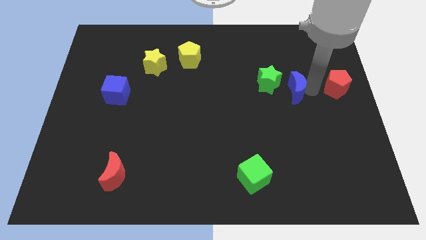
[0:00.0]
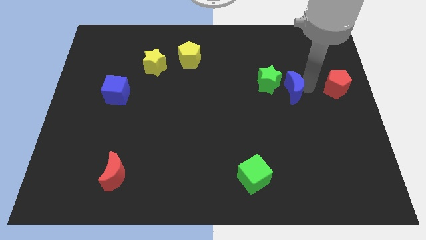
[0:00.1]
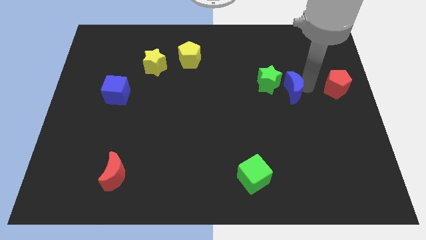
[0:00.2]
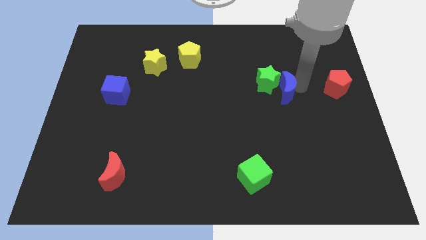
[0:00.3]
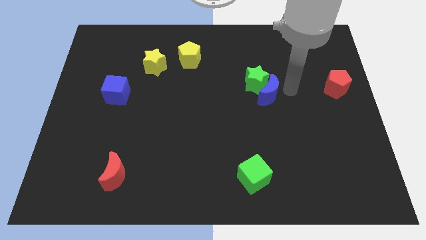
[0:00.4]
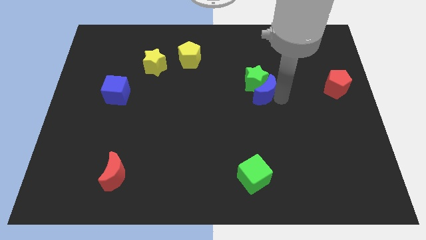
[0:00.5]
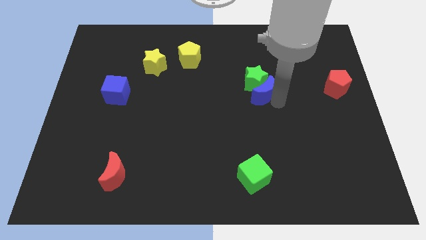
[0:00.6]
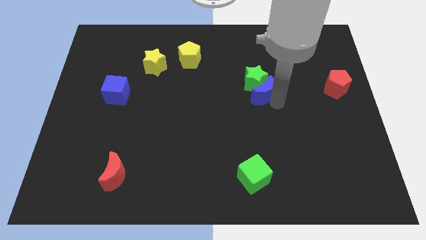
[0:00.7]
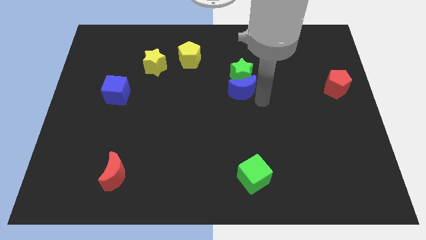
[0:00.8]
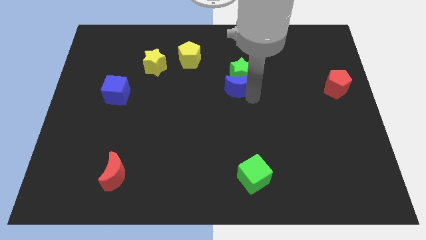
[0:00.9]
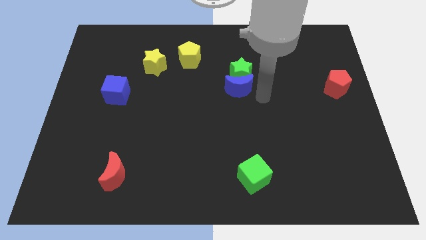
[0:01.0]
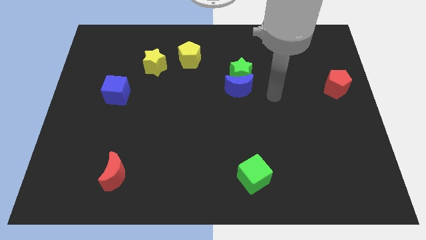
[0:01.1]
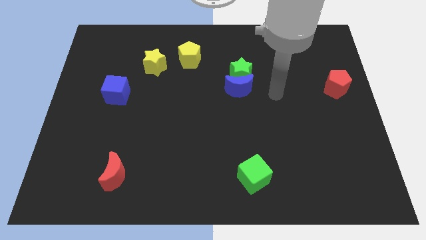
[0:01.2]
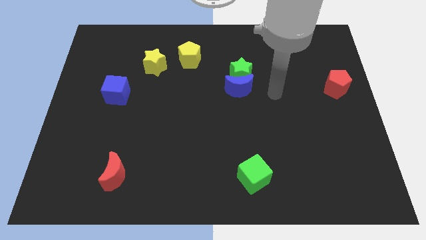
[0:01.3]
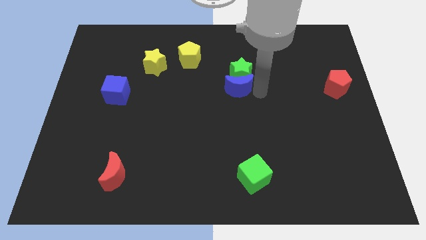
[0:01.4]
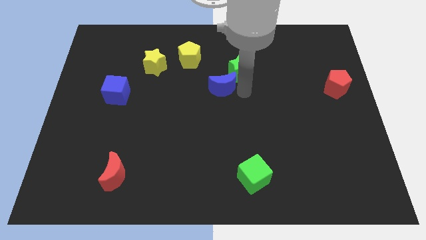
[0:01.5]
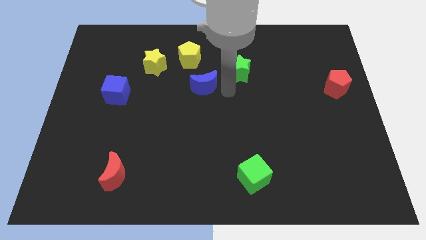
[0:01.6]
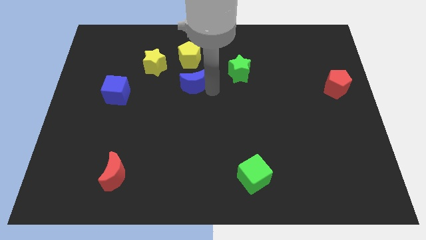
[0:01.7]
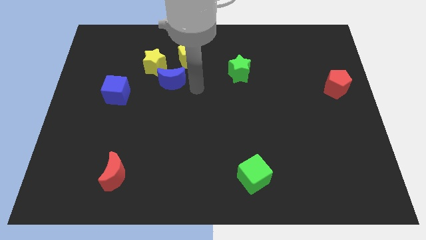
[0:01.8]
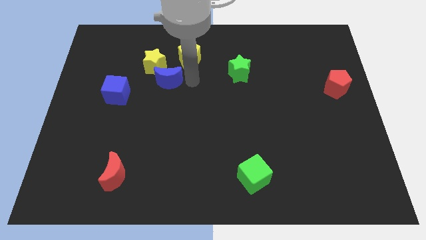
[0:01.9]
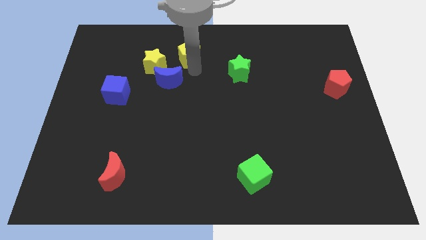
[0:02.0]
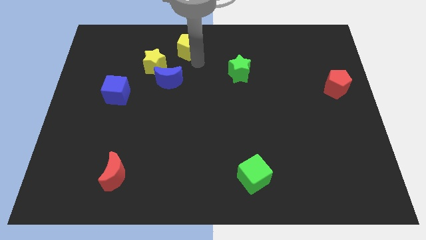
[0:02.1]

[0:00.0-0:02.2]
move the blue moon to the bottom of yellow star

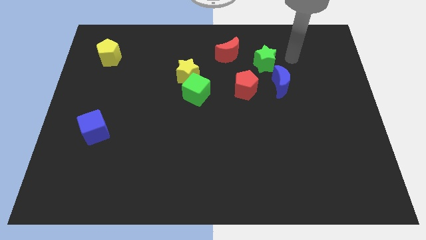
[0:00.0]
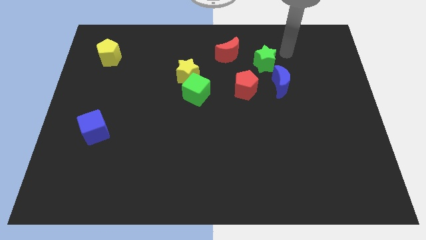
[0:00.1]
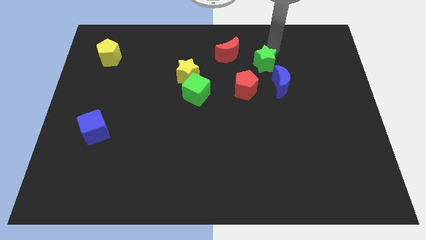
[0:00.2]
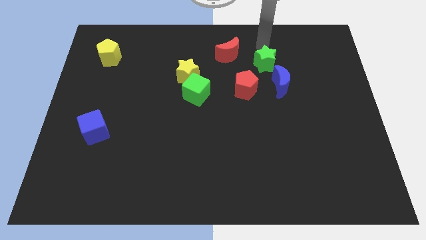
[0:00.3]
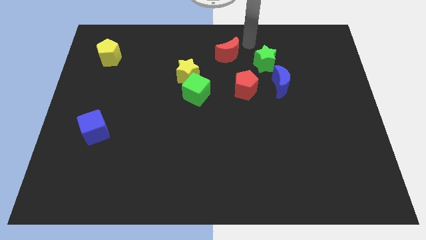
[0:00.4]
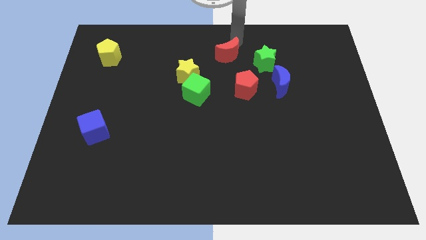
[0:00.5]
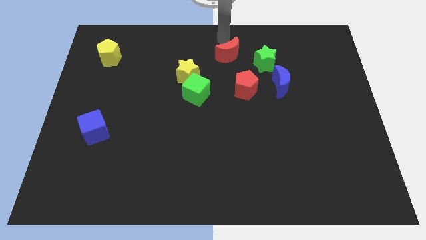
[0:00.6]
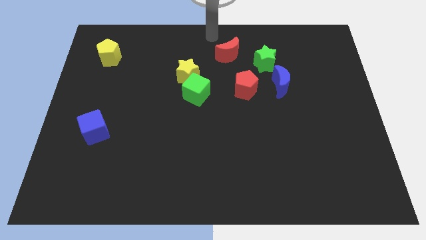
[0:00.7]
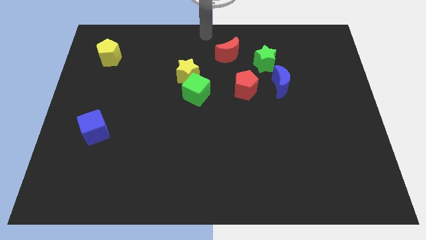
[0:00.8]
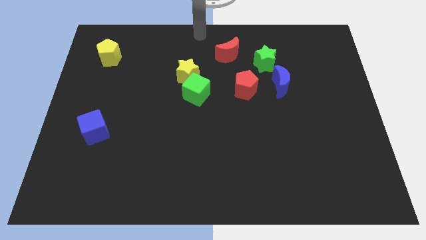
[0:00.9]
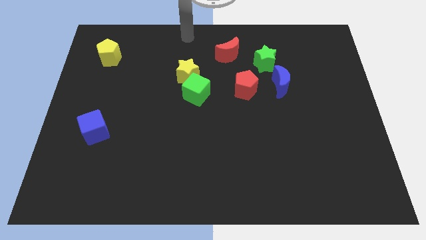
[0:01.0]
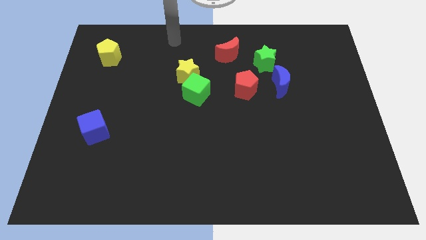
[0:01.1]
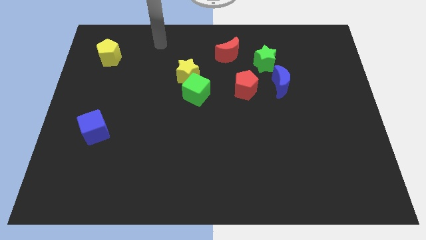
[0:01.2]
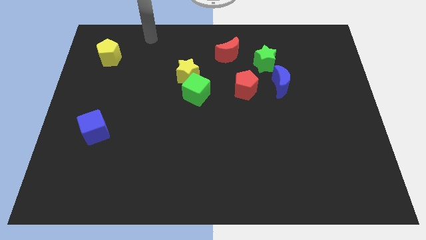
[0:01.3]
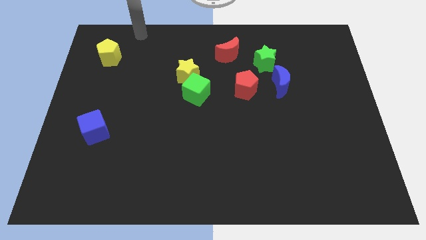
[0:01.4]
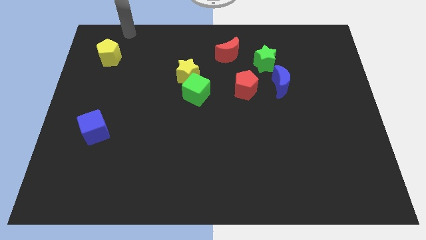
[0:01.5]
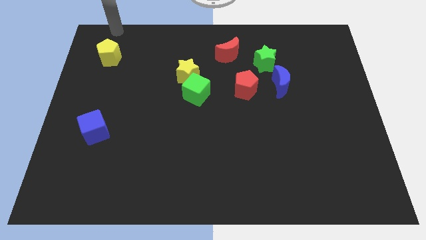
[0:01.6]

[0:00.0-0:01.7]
place your arm above the yellow pentagon

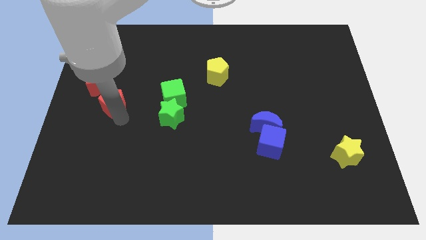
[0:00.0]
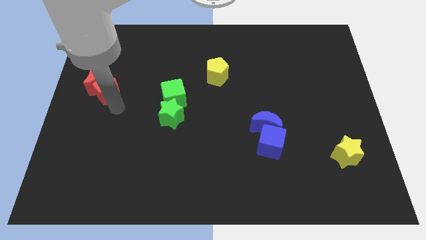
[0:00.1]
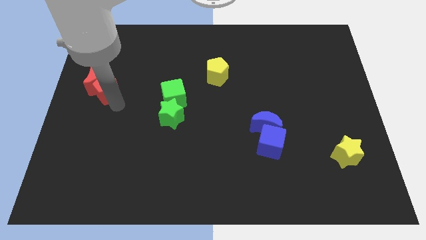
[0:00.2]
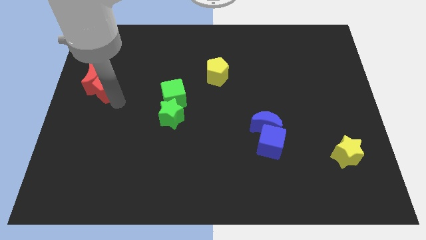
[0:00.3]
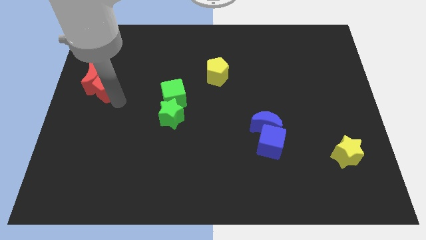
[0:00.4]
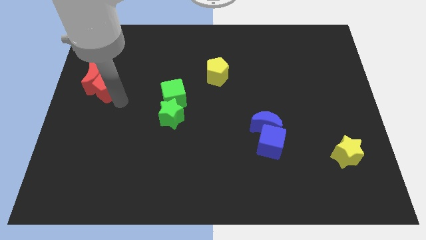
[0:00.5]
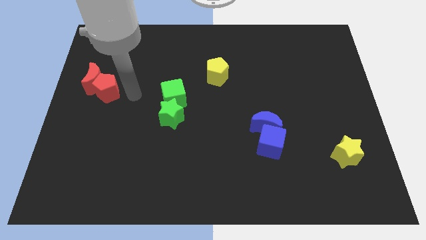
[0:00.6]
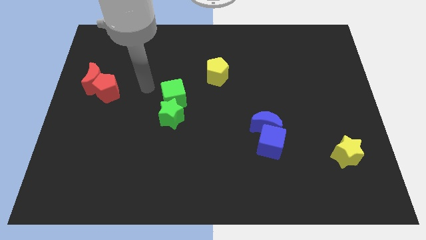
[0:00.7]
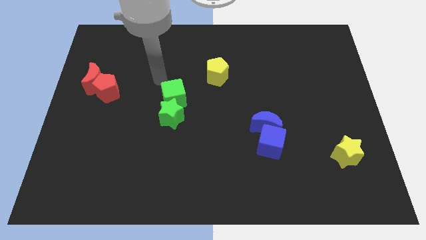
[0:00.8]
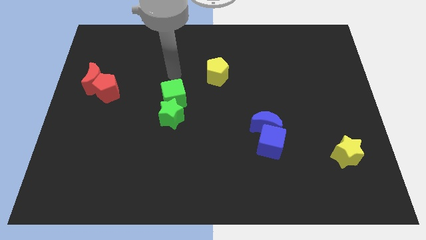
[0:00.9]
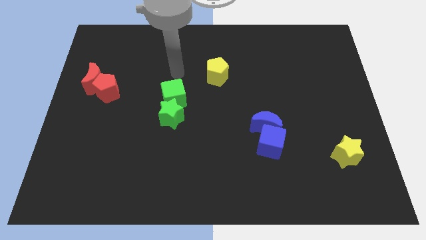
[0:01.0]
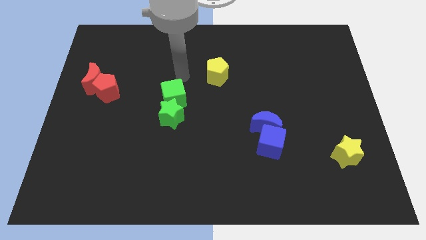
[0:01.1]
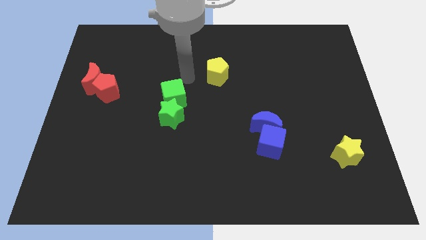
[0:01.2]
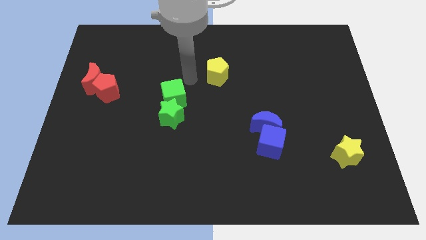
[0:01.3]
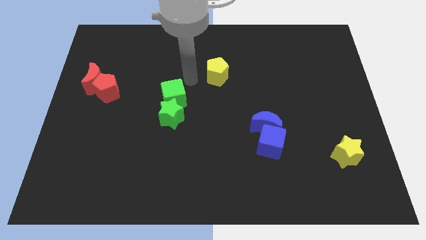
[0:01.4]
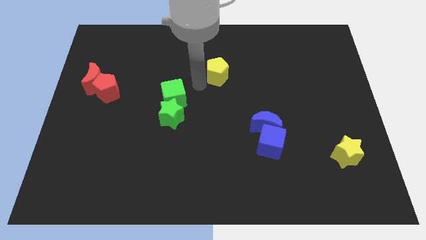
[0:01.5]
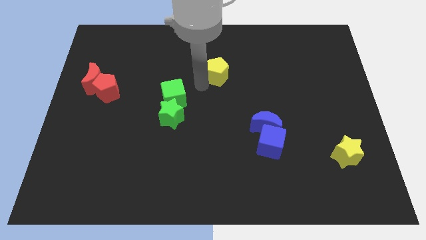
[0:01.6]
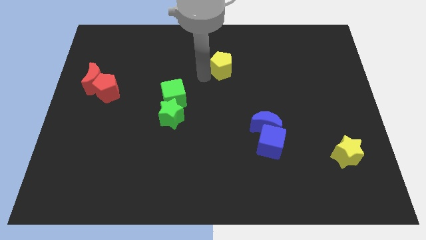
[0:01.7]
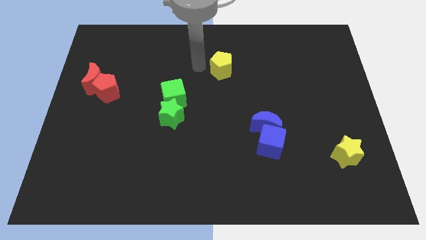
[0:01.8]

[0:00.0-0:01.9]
push the yellow pentagon towards right

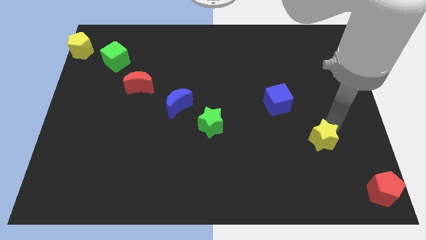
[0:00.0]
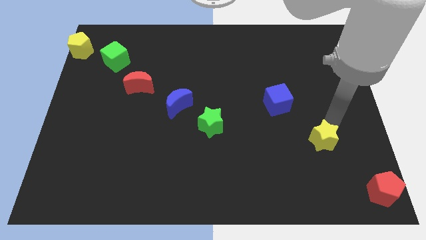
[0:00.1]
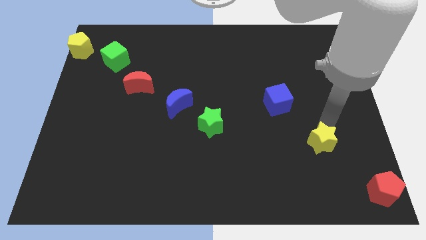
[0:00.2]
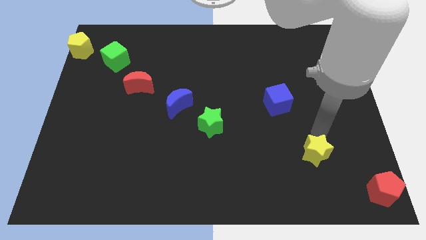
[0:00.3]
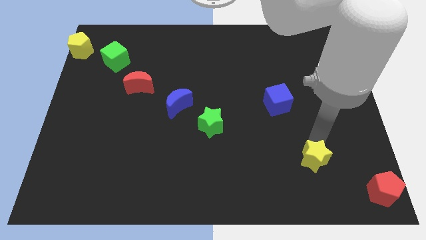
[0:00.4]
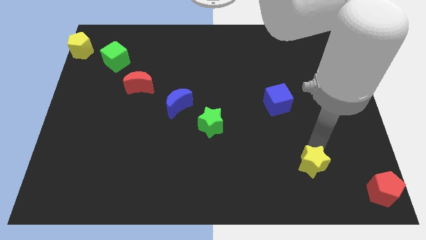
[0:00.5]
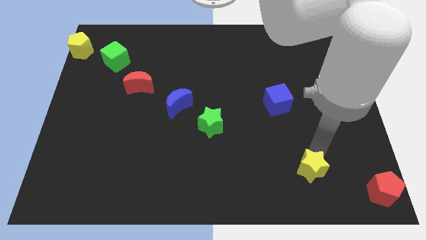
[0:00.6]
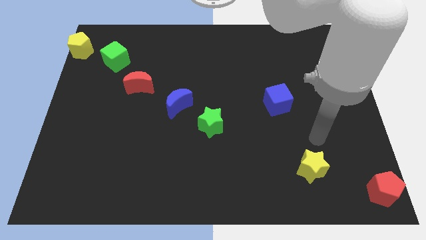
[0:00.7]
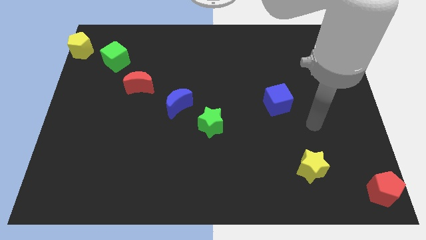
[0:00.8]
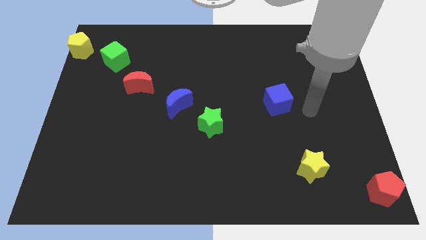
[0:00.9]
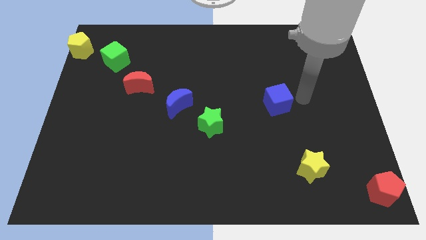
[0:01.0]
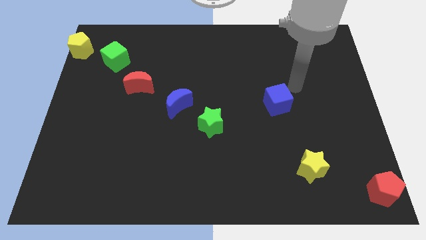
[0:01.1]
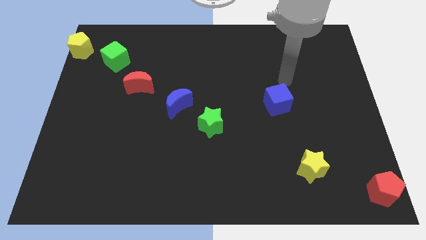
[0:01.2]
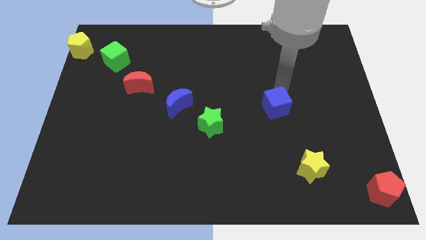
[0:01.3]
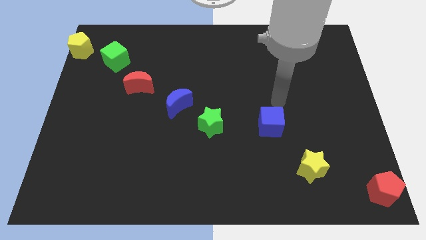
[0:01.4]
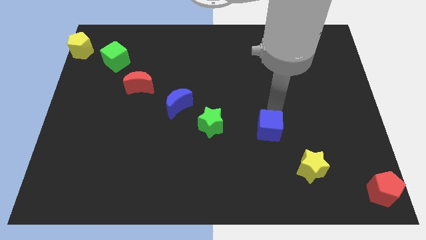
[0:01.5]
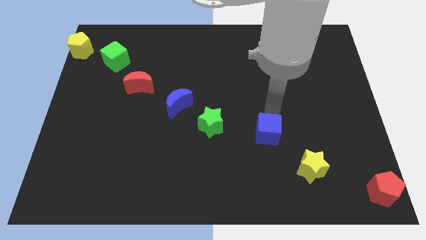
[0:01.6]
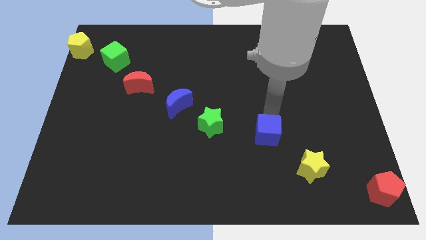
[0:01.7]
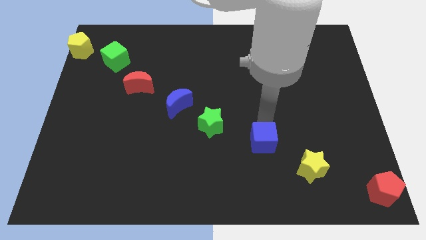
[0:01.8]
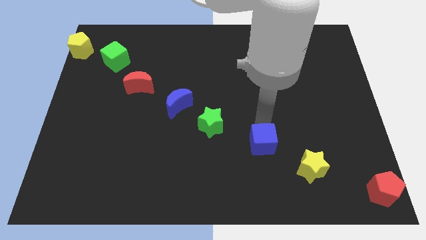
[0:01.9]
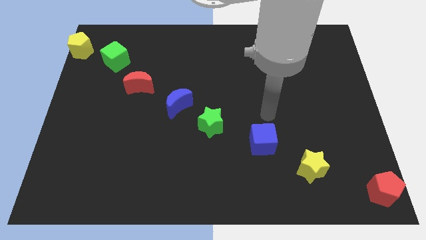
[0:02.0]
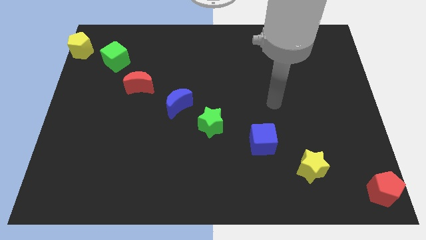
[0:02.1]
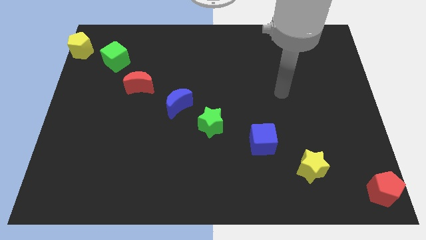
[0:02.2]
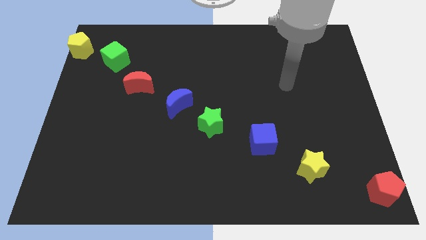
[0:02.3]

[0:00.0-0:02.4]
move the yellow star and blue cube towards bottom

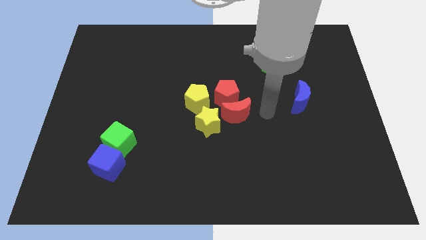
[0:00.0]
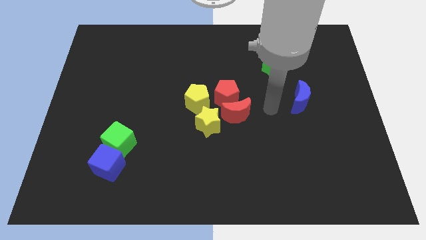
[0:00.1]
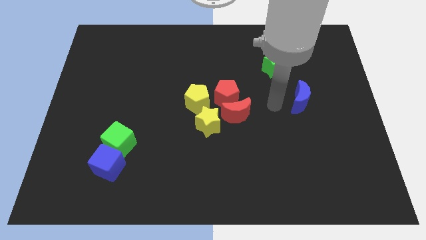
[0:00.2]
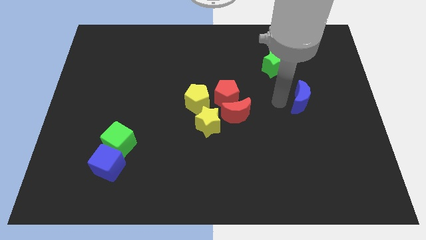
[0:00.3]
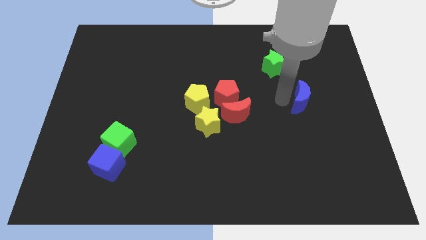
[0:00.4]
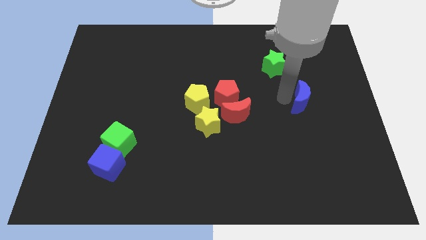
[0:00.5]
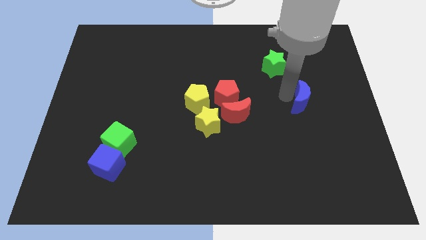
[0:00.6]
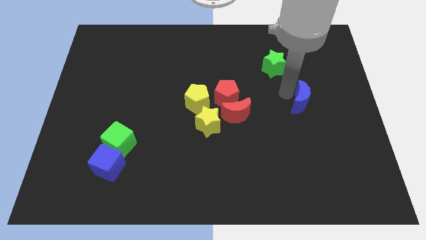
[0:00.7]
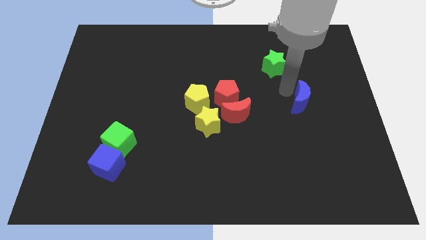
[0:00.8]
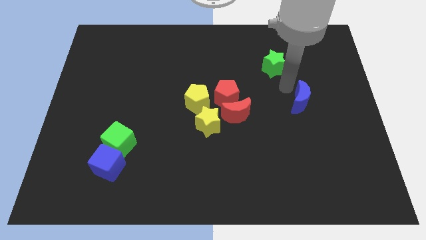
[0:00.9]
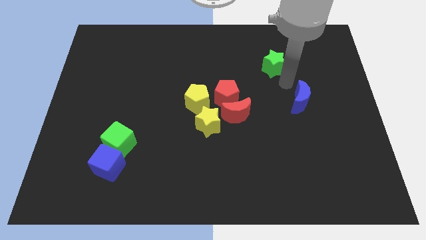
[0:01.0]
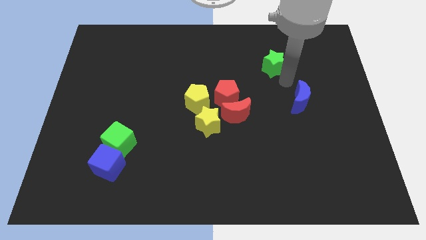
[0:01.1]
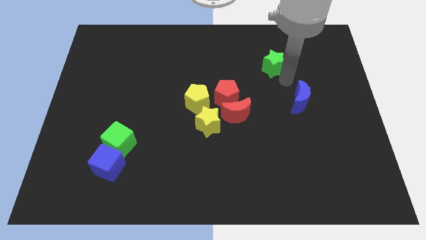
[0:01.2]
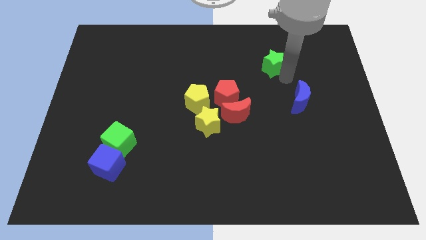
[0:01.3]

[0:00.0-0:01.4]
move your arm to the bottom of green star
